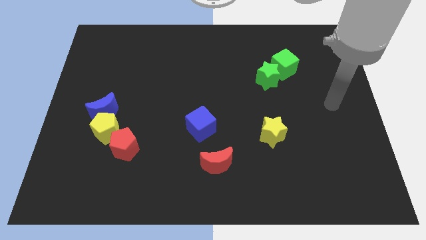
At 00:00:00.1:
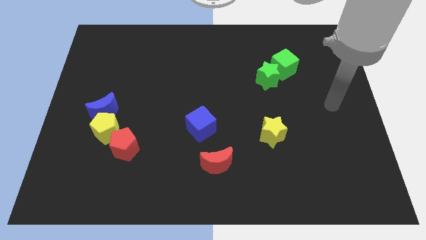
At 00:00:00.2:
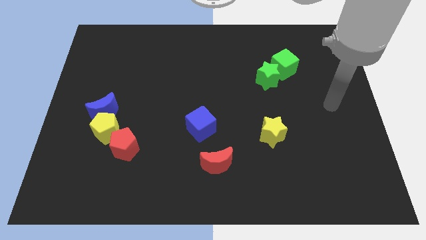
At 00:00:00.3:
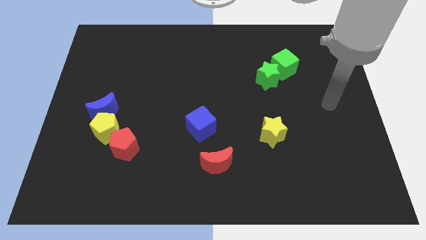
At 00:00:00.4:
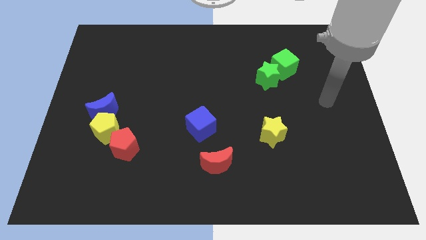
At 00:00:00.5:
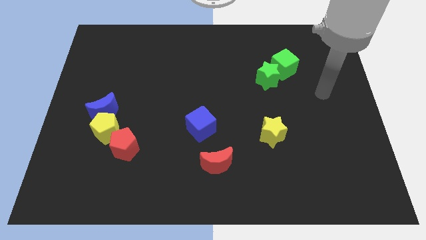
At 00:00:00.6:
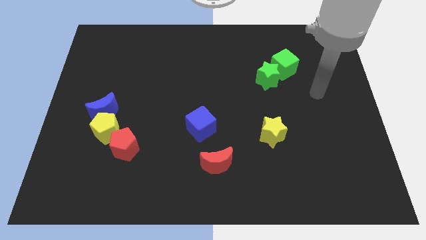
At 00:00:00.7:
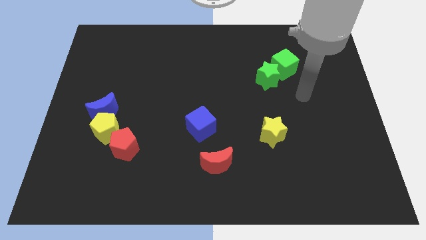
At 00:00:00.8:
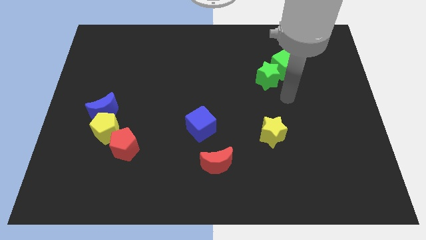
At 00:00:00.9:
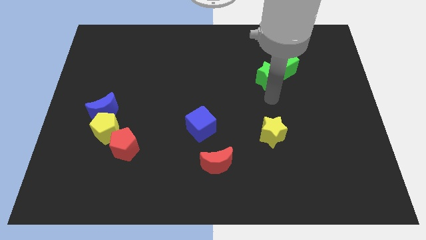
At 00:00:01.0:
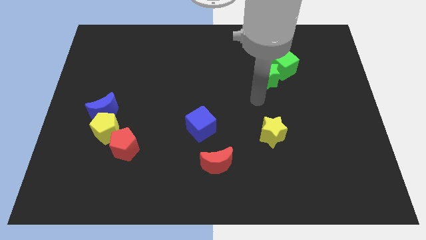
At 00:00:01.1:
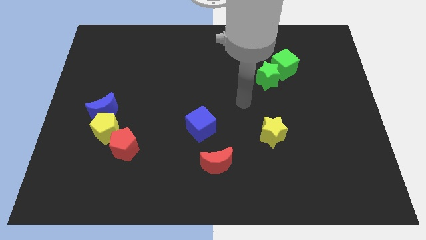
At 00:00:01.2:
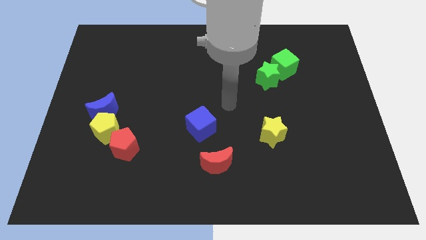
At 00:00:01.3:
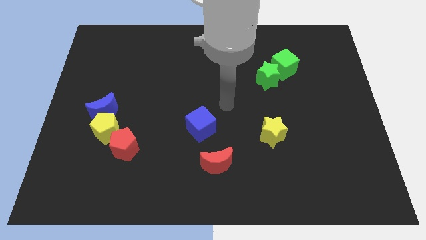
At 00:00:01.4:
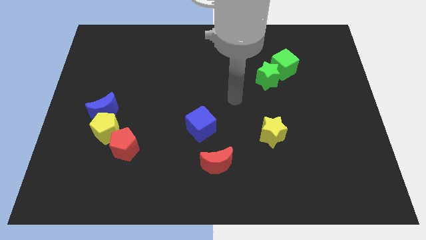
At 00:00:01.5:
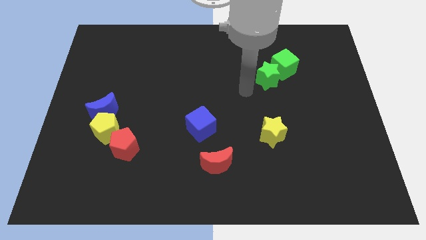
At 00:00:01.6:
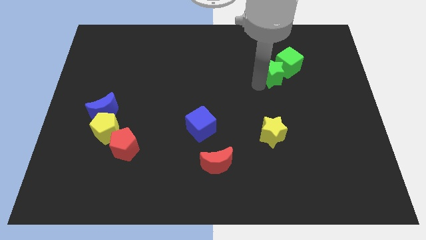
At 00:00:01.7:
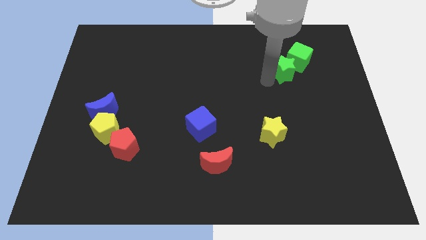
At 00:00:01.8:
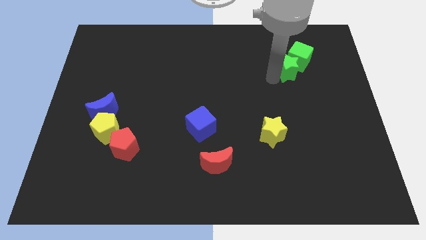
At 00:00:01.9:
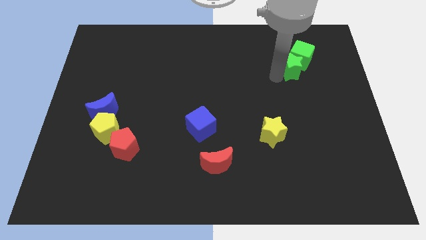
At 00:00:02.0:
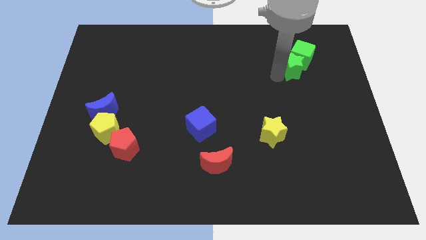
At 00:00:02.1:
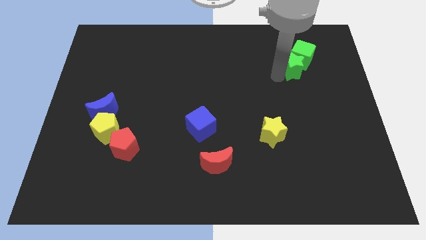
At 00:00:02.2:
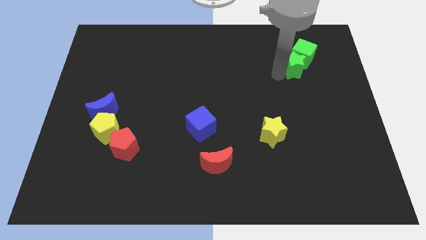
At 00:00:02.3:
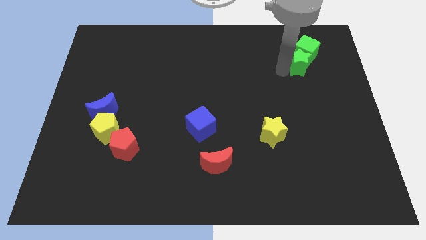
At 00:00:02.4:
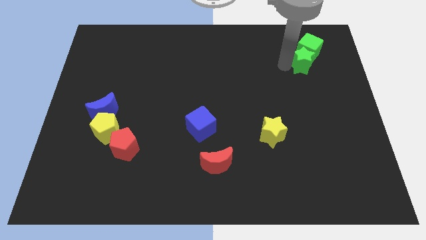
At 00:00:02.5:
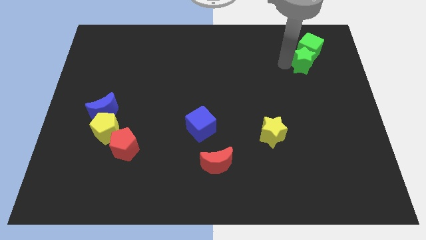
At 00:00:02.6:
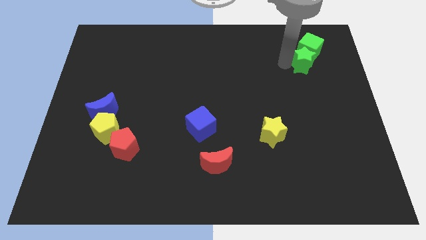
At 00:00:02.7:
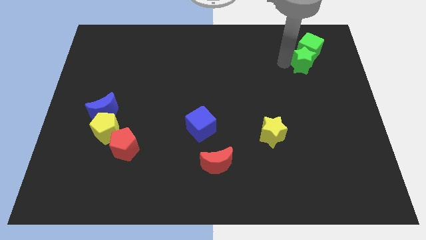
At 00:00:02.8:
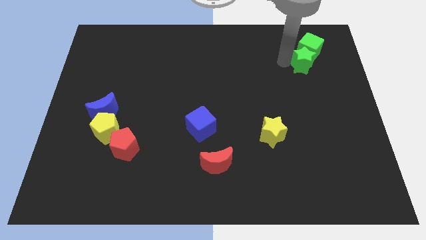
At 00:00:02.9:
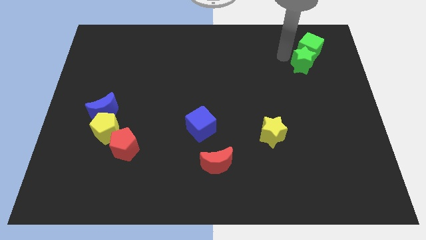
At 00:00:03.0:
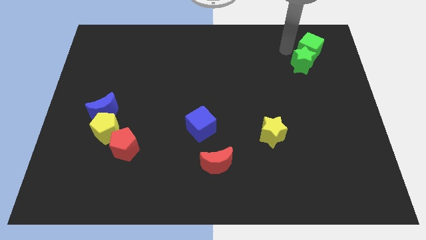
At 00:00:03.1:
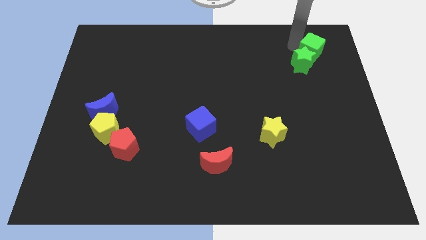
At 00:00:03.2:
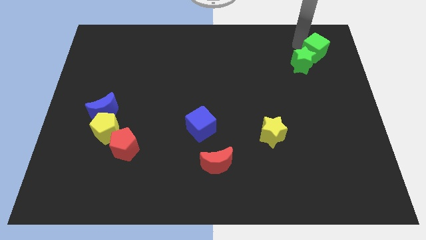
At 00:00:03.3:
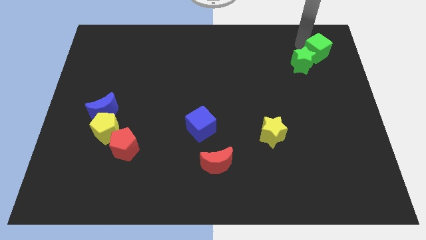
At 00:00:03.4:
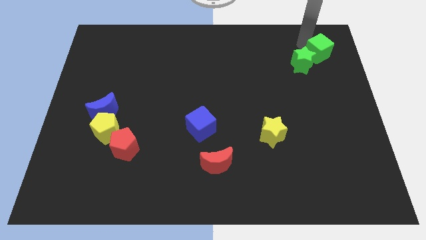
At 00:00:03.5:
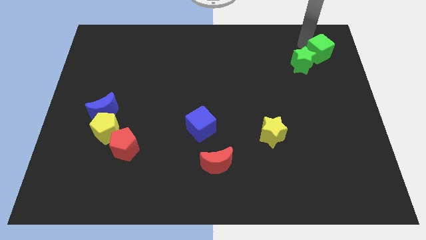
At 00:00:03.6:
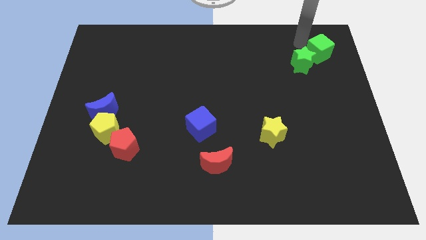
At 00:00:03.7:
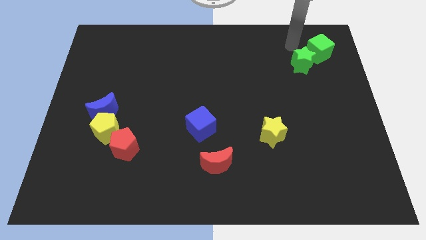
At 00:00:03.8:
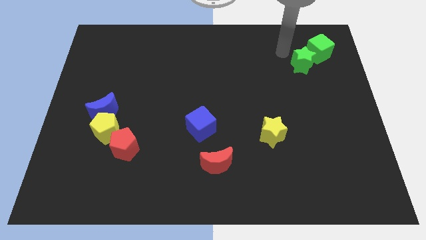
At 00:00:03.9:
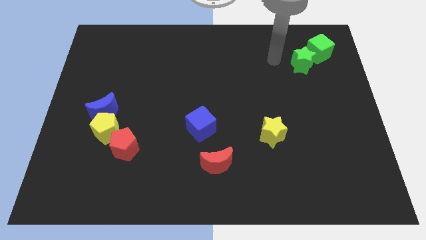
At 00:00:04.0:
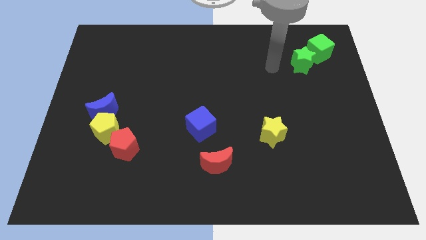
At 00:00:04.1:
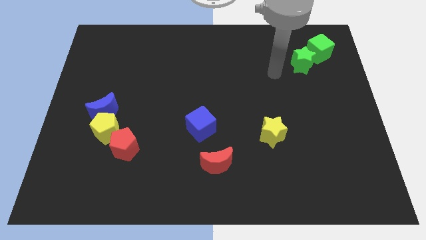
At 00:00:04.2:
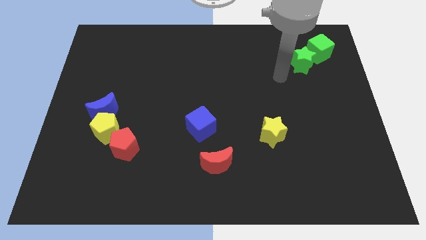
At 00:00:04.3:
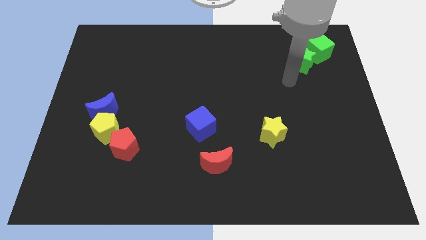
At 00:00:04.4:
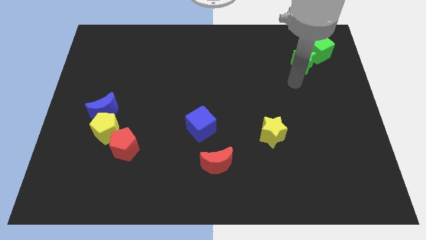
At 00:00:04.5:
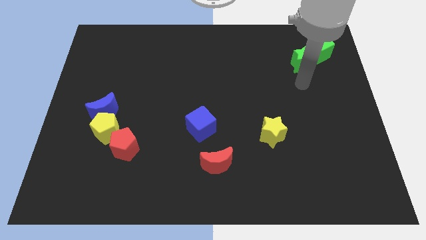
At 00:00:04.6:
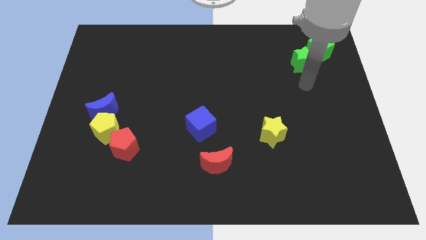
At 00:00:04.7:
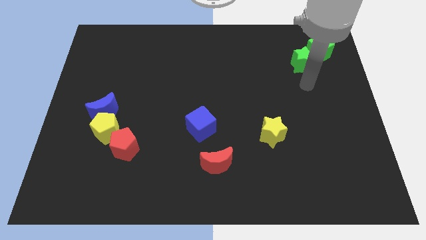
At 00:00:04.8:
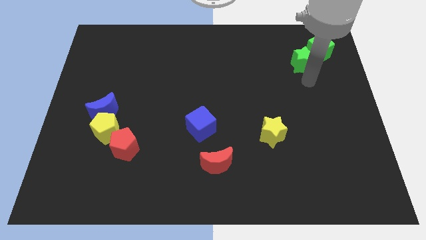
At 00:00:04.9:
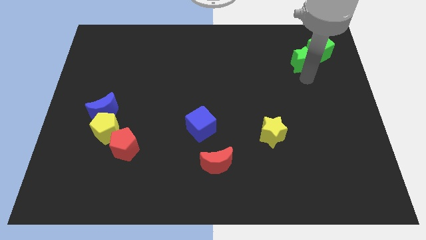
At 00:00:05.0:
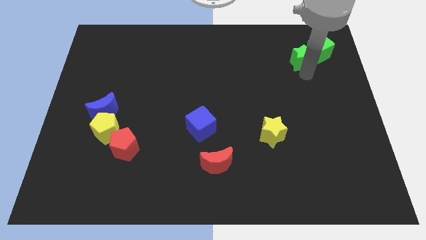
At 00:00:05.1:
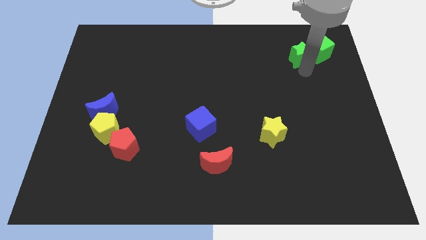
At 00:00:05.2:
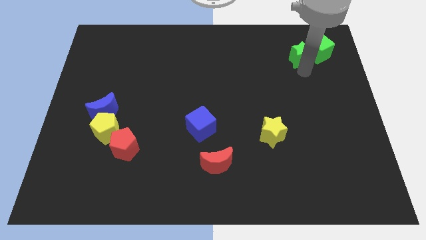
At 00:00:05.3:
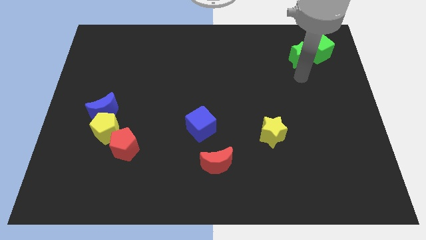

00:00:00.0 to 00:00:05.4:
push the green star and green cube towards the top right

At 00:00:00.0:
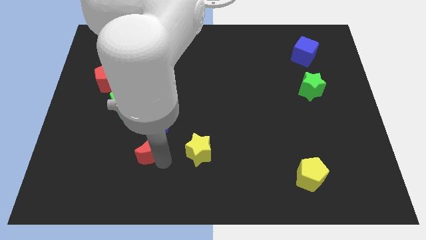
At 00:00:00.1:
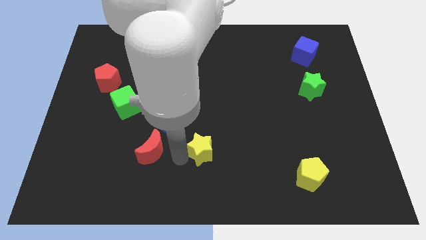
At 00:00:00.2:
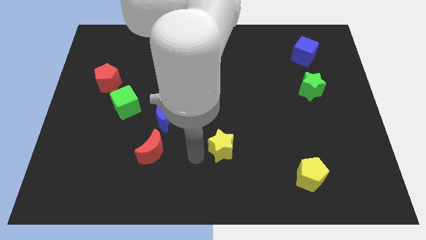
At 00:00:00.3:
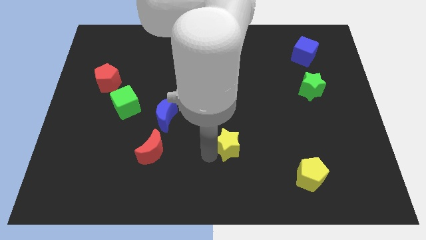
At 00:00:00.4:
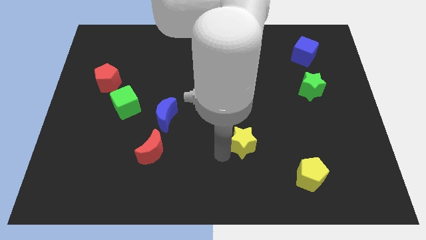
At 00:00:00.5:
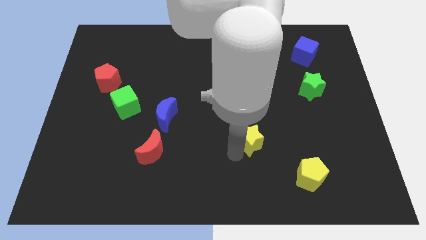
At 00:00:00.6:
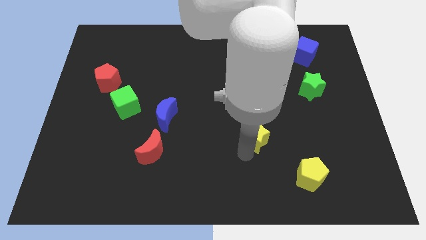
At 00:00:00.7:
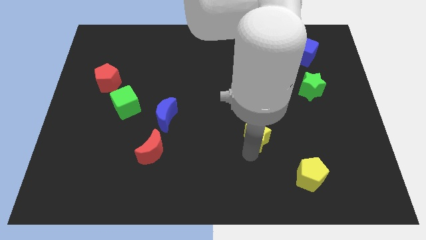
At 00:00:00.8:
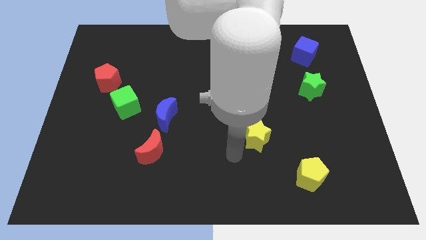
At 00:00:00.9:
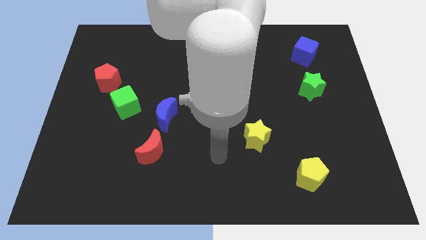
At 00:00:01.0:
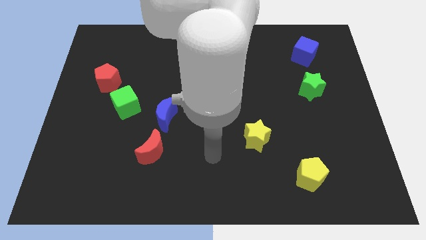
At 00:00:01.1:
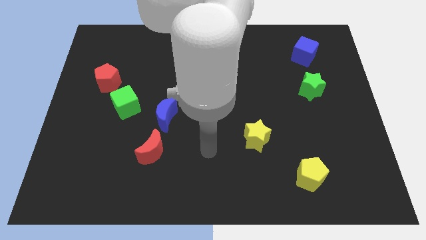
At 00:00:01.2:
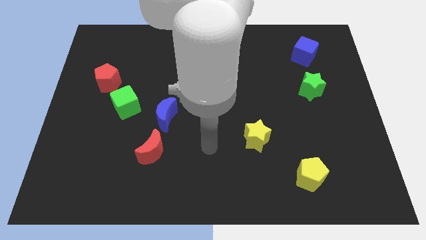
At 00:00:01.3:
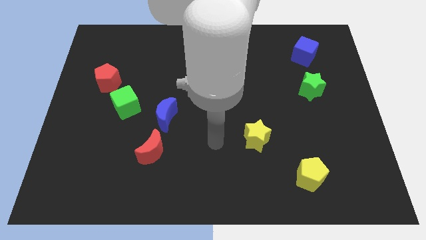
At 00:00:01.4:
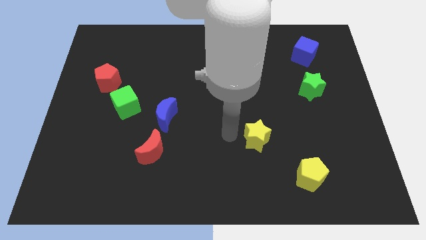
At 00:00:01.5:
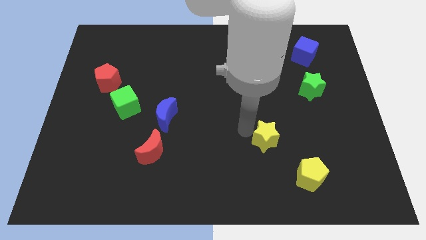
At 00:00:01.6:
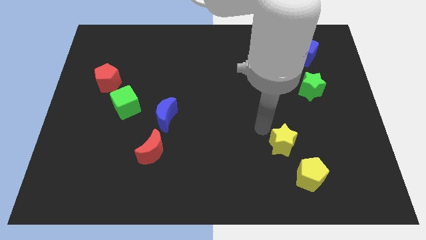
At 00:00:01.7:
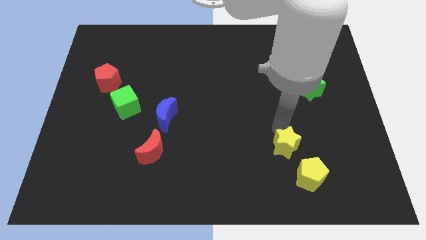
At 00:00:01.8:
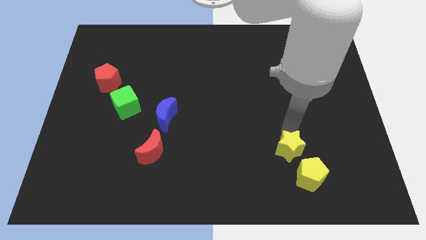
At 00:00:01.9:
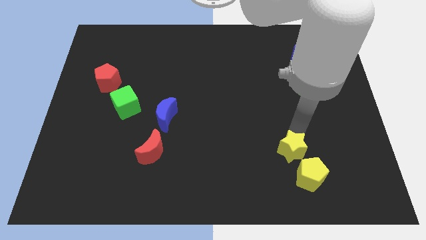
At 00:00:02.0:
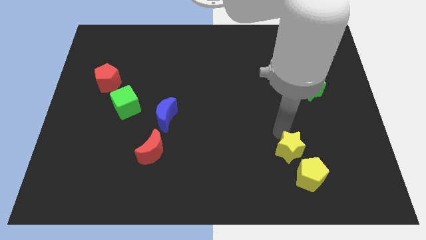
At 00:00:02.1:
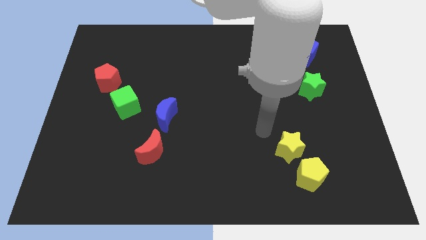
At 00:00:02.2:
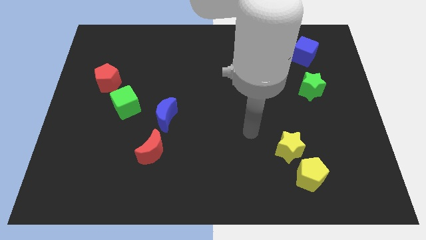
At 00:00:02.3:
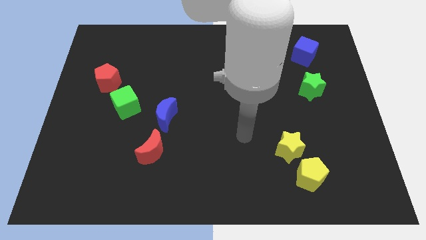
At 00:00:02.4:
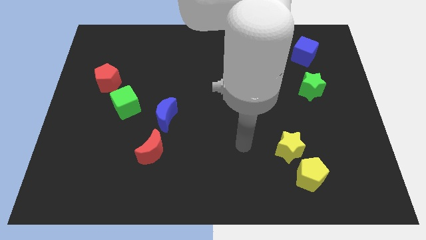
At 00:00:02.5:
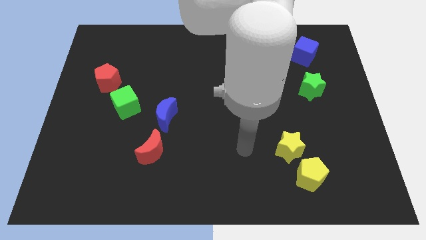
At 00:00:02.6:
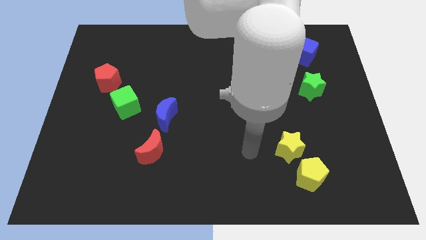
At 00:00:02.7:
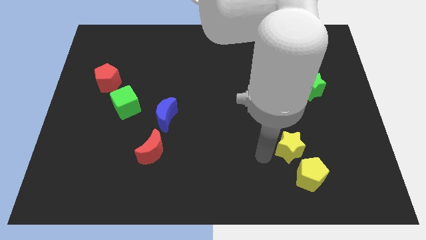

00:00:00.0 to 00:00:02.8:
push the yellow star to the left top diagonal to the yellow pentagon

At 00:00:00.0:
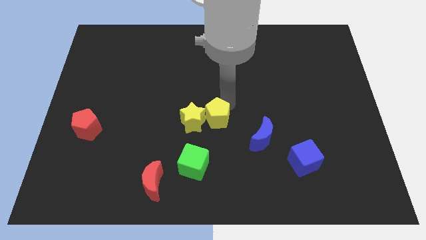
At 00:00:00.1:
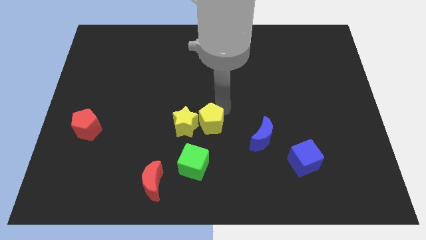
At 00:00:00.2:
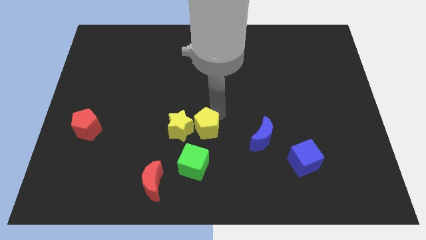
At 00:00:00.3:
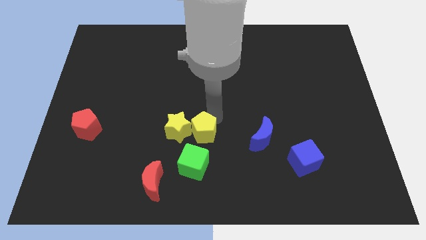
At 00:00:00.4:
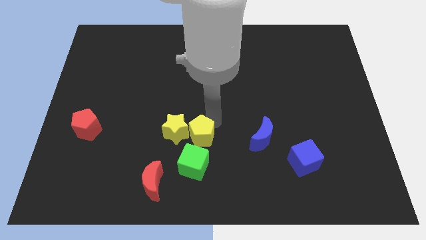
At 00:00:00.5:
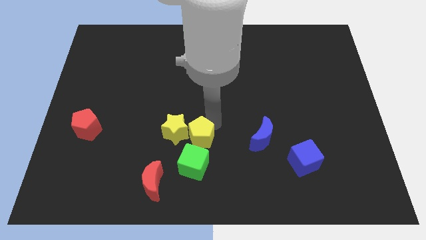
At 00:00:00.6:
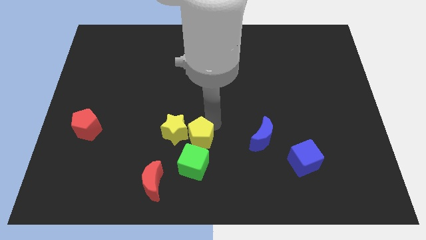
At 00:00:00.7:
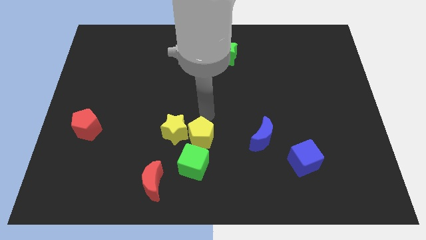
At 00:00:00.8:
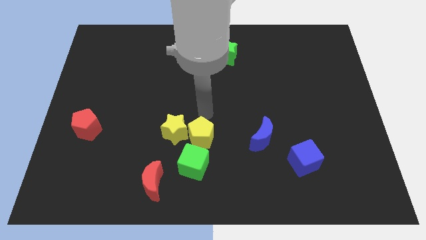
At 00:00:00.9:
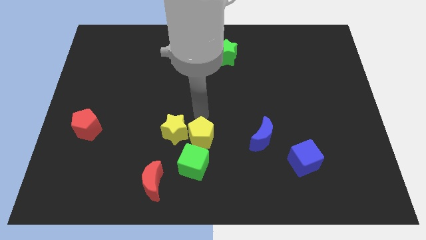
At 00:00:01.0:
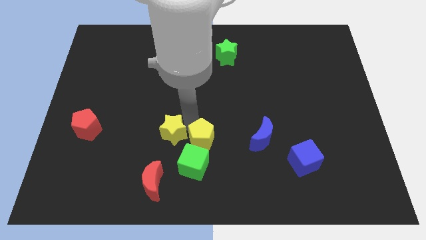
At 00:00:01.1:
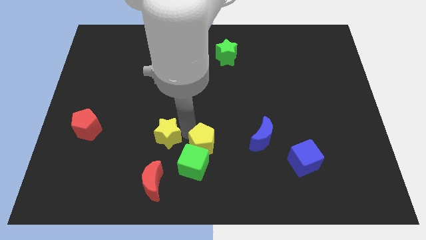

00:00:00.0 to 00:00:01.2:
move the yellow pentagon into the green cube
